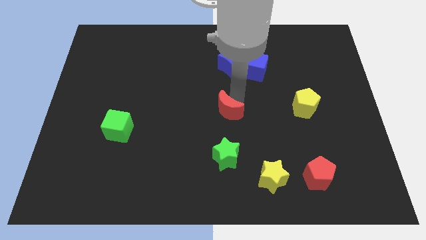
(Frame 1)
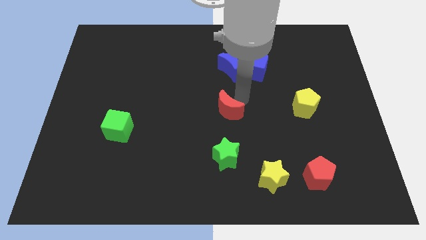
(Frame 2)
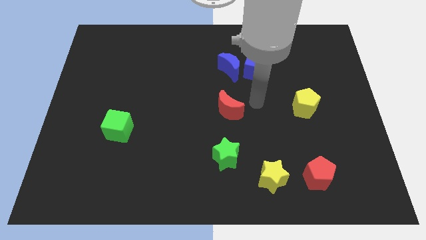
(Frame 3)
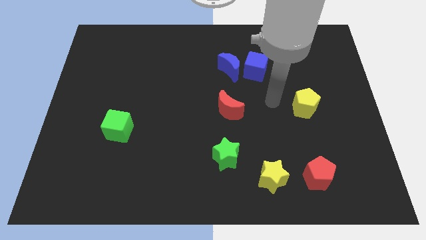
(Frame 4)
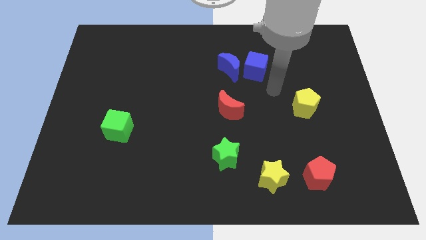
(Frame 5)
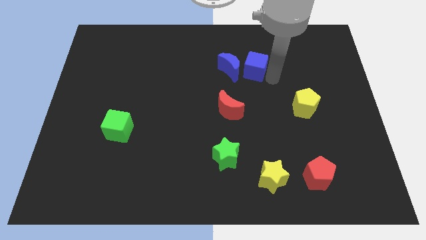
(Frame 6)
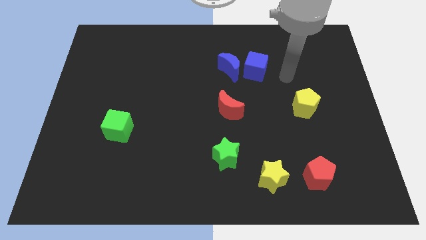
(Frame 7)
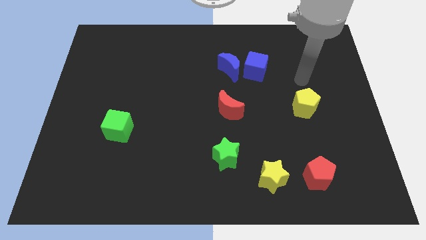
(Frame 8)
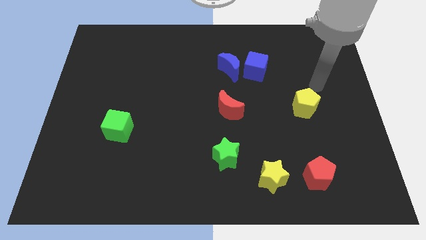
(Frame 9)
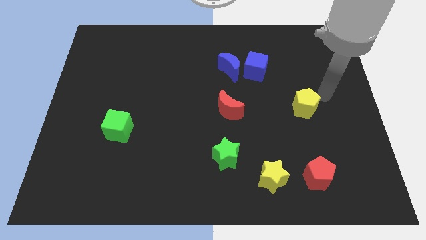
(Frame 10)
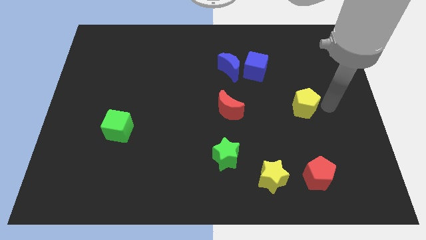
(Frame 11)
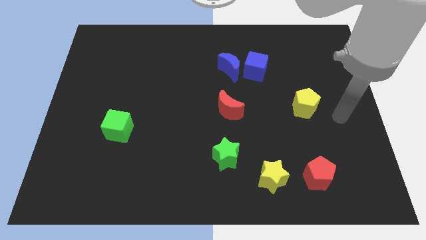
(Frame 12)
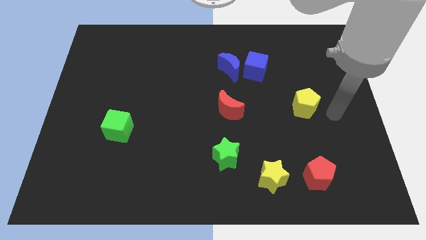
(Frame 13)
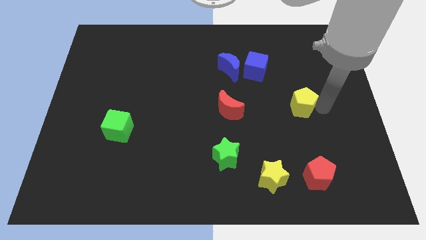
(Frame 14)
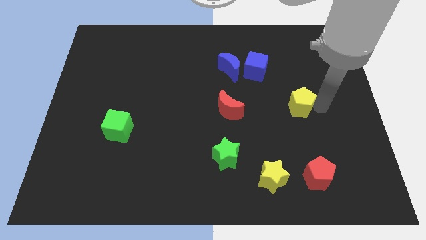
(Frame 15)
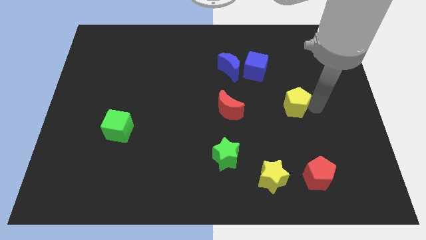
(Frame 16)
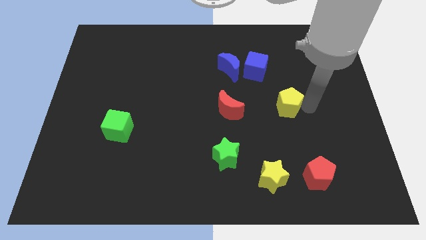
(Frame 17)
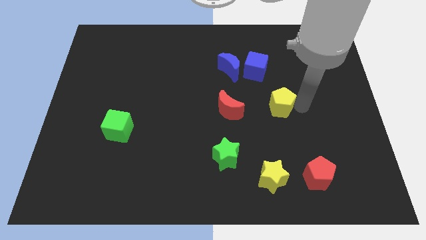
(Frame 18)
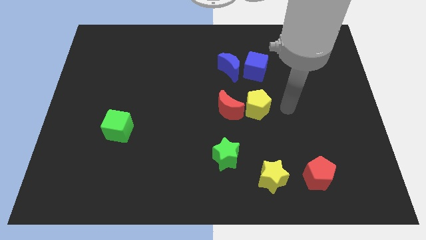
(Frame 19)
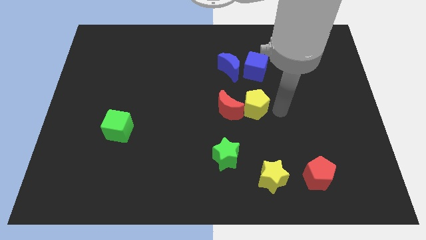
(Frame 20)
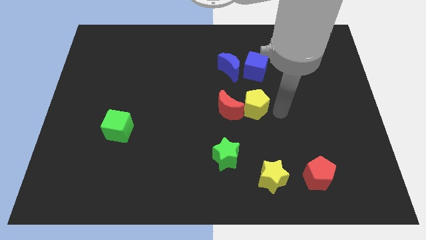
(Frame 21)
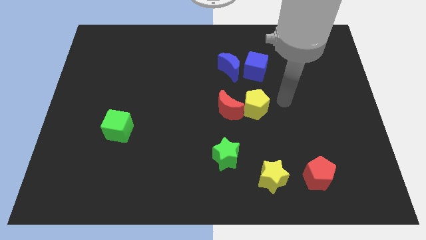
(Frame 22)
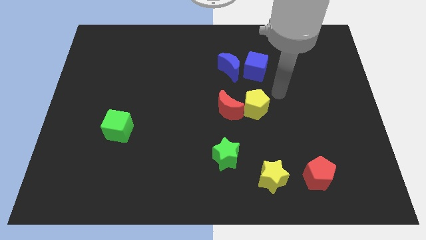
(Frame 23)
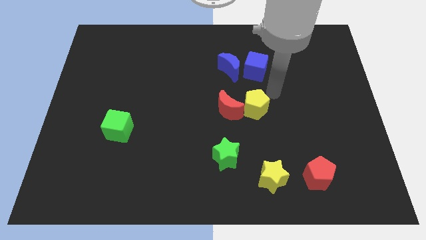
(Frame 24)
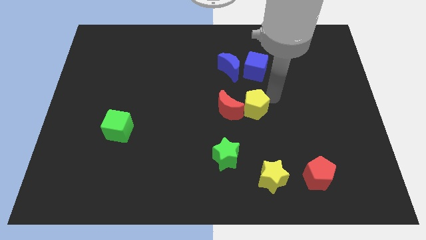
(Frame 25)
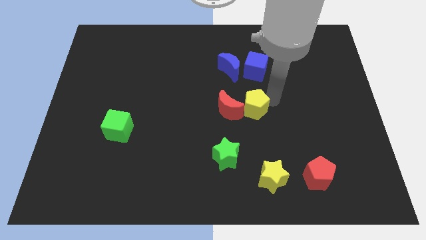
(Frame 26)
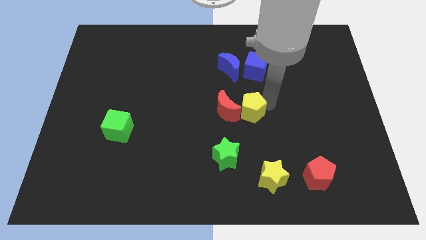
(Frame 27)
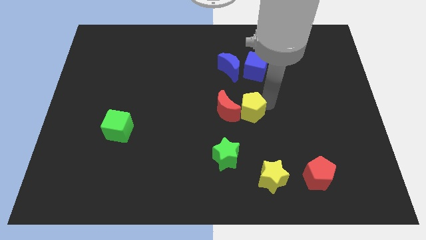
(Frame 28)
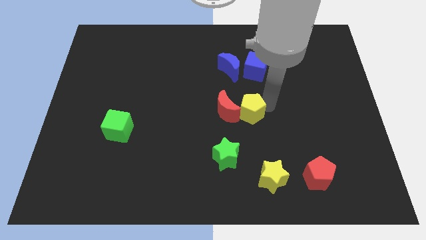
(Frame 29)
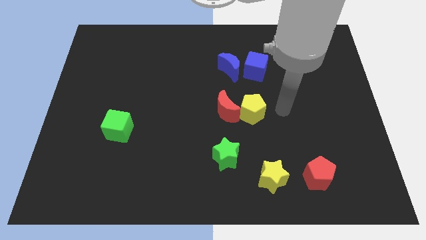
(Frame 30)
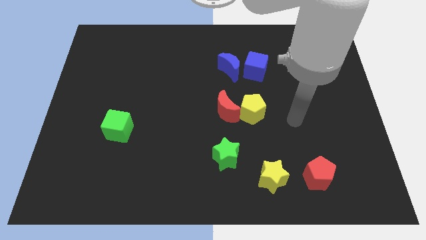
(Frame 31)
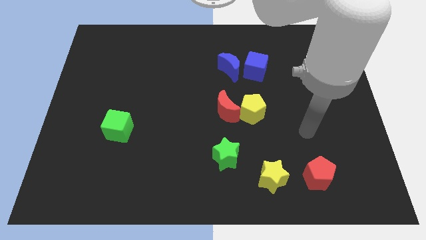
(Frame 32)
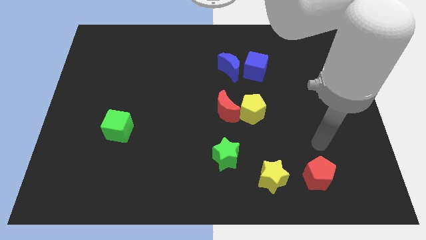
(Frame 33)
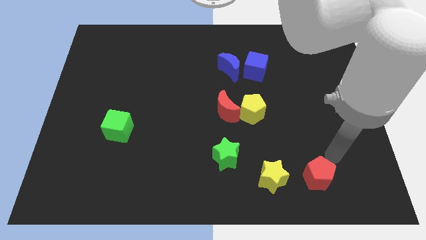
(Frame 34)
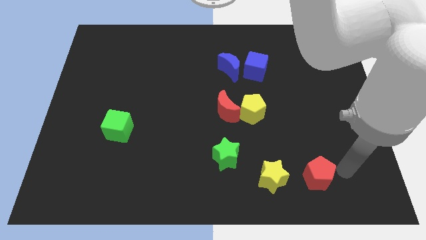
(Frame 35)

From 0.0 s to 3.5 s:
move yellow pentagon into red moon

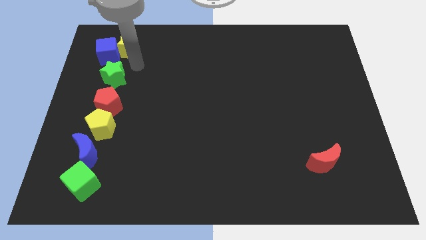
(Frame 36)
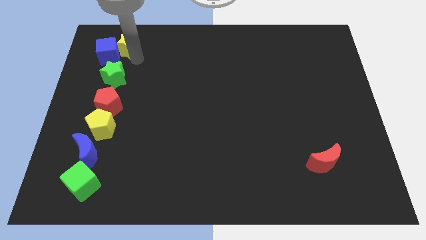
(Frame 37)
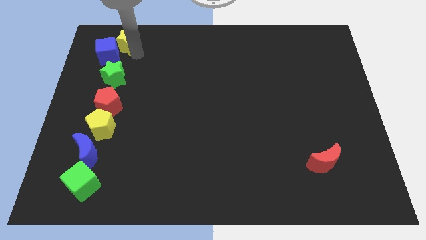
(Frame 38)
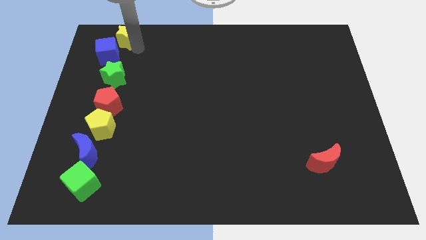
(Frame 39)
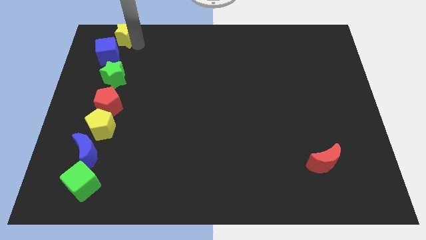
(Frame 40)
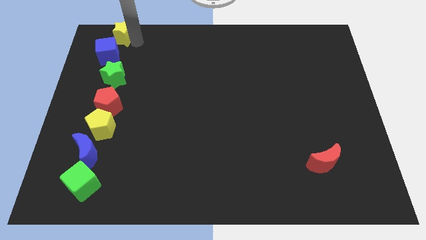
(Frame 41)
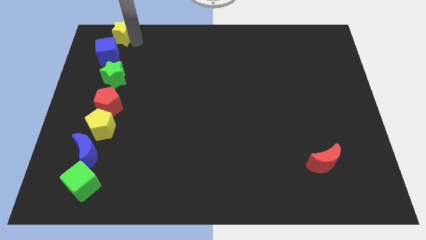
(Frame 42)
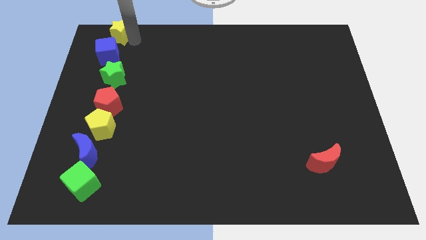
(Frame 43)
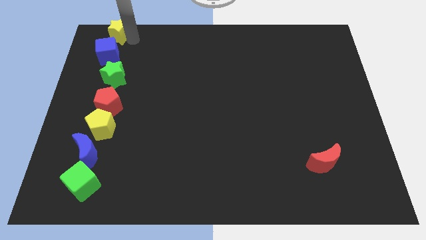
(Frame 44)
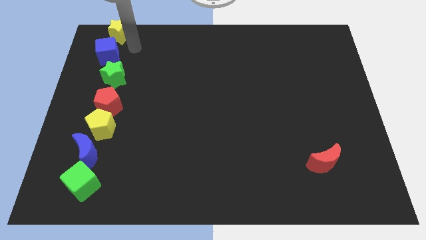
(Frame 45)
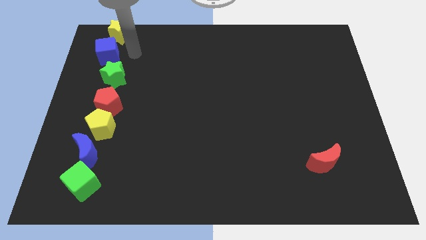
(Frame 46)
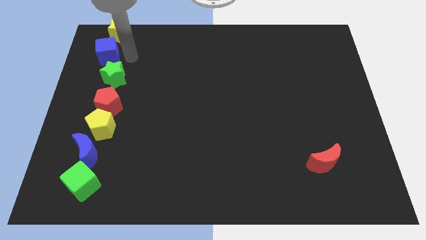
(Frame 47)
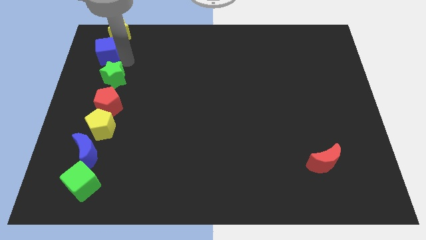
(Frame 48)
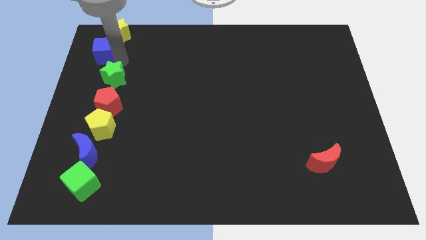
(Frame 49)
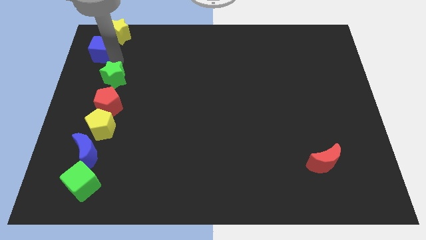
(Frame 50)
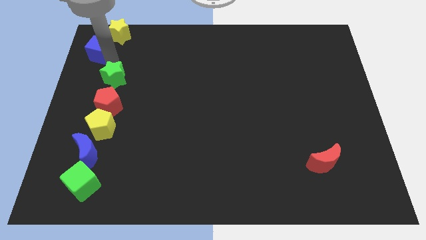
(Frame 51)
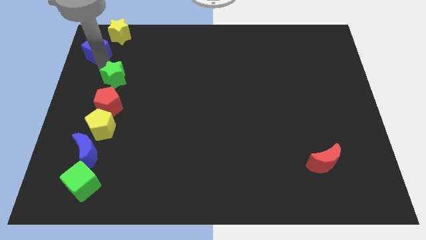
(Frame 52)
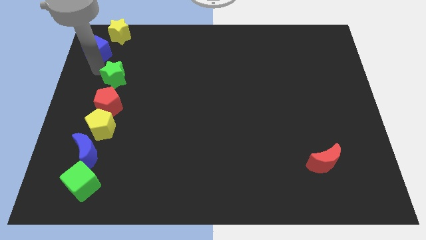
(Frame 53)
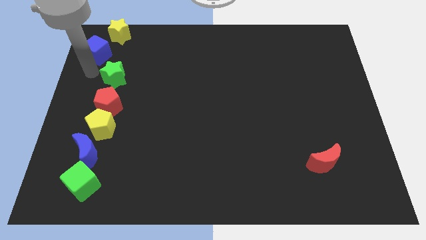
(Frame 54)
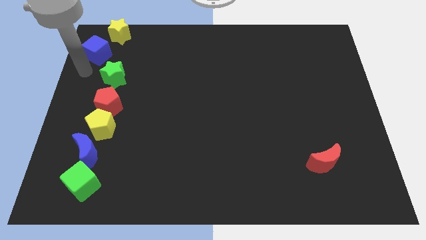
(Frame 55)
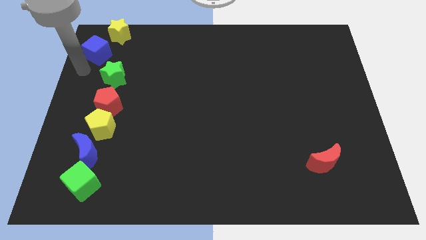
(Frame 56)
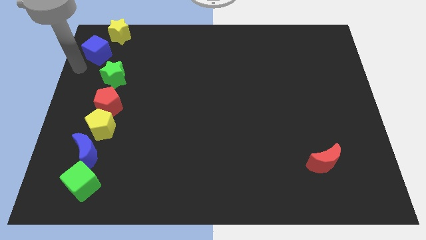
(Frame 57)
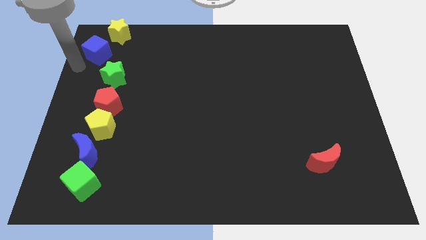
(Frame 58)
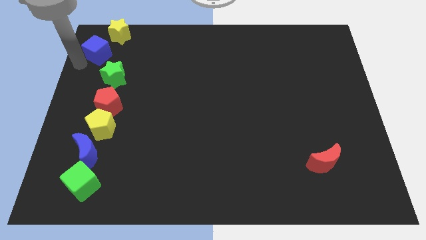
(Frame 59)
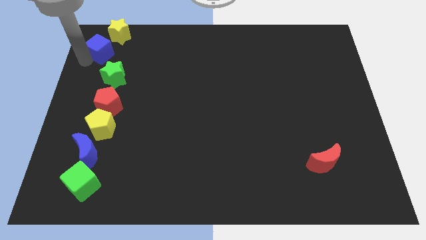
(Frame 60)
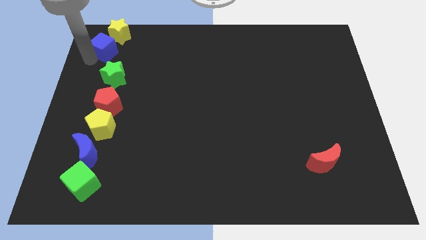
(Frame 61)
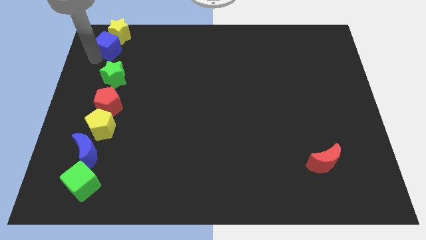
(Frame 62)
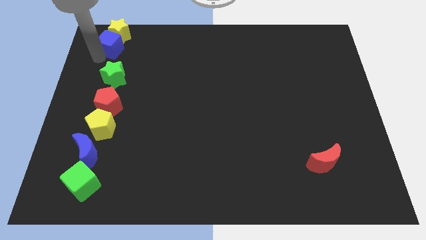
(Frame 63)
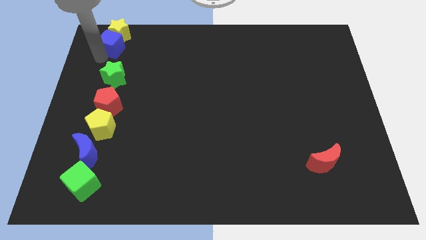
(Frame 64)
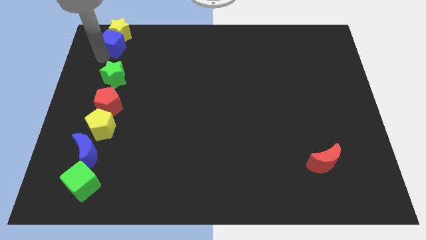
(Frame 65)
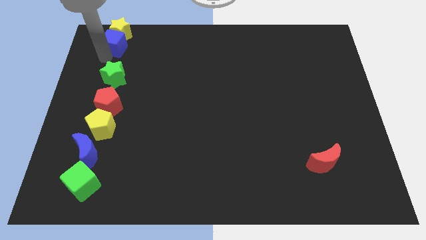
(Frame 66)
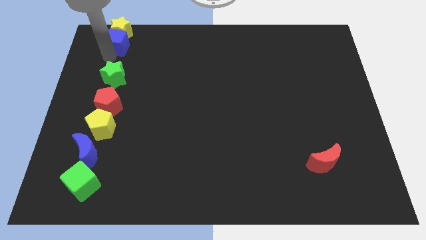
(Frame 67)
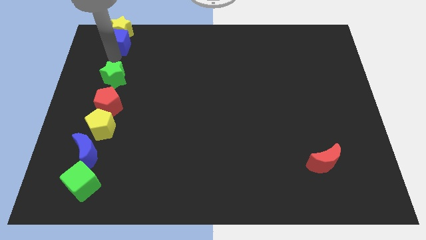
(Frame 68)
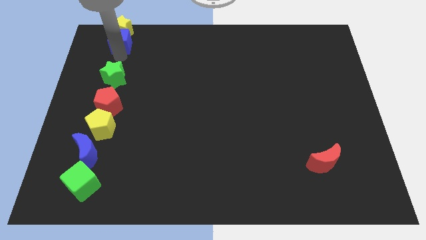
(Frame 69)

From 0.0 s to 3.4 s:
place the blue cube below the yellow star

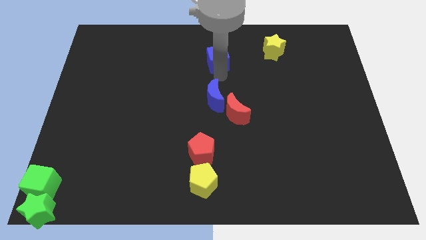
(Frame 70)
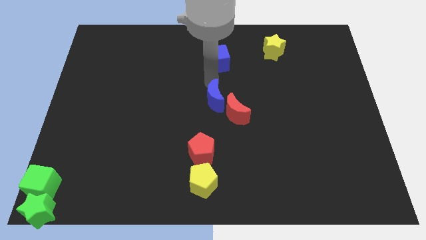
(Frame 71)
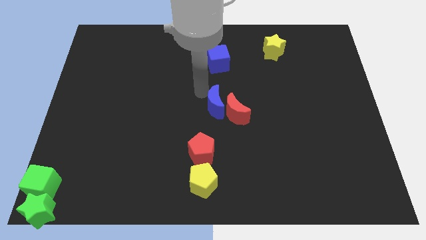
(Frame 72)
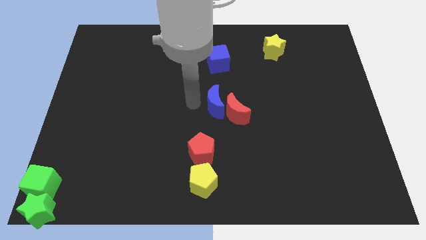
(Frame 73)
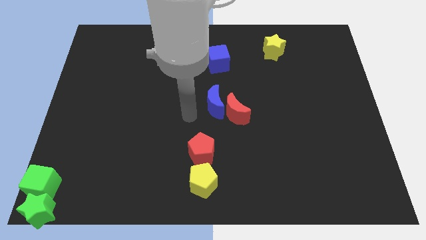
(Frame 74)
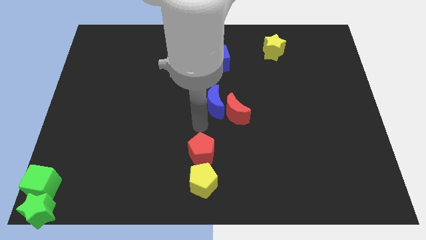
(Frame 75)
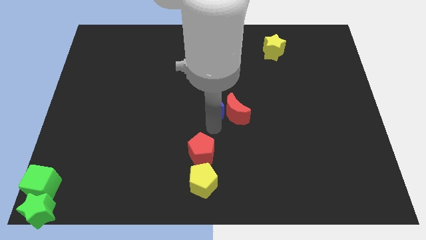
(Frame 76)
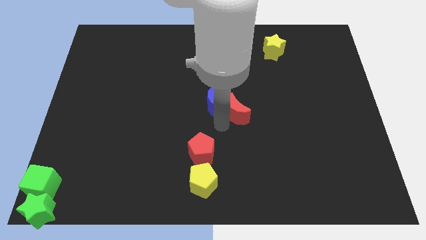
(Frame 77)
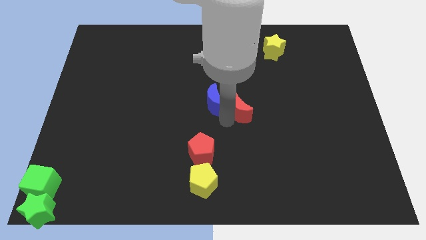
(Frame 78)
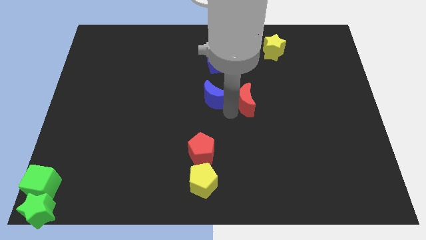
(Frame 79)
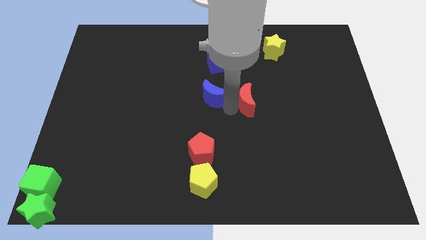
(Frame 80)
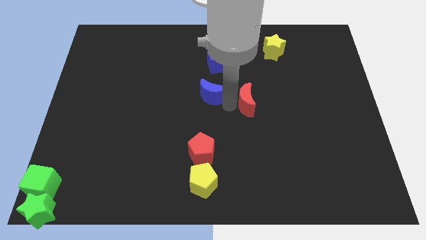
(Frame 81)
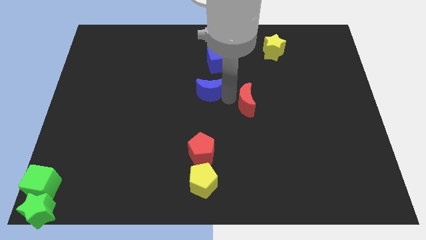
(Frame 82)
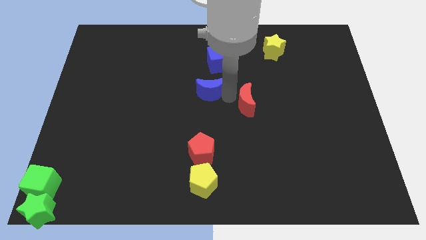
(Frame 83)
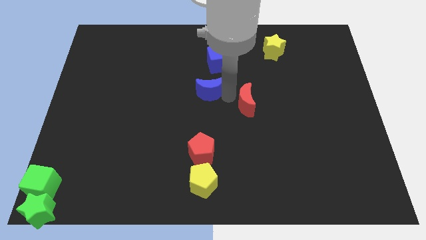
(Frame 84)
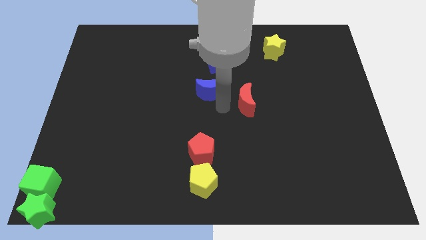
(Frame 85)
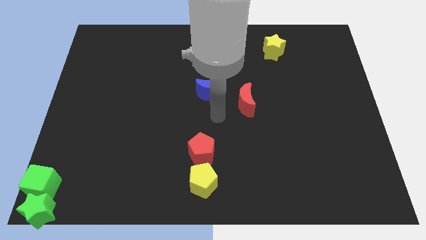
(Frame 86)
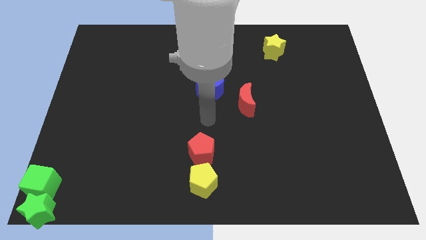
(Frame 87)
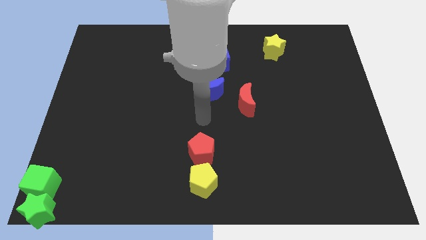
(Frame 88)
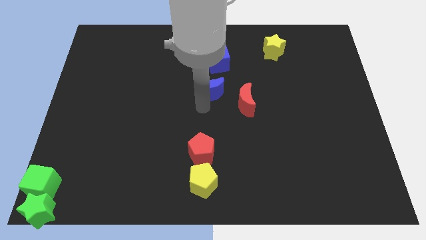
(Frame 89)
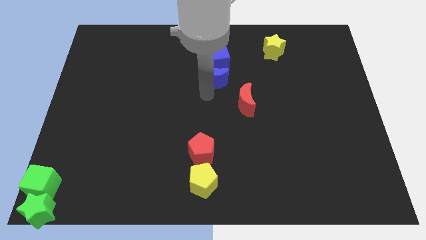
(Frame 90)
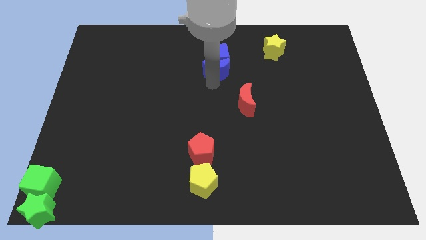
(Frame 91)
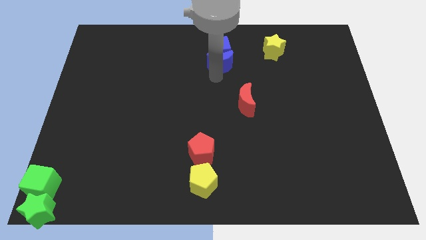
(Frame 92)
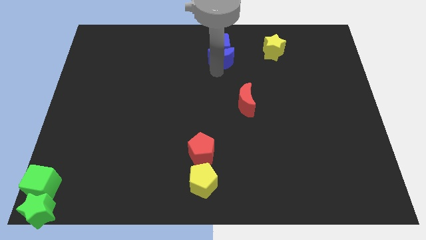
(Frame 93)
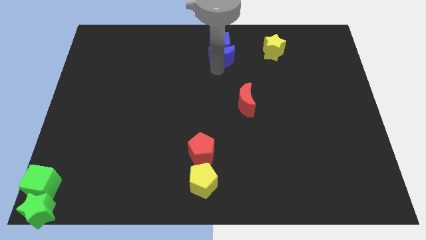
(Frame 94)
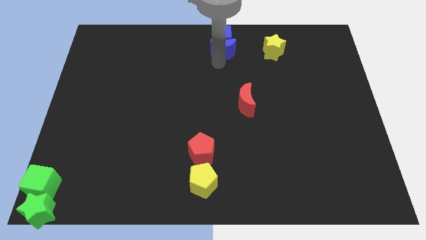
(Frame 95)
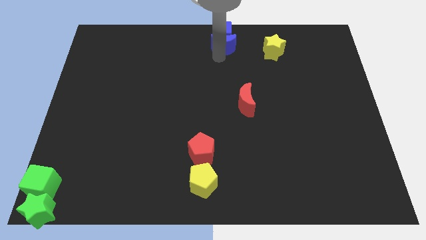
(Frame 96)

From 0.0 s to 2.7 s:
push blue moon into blue cube
